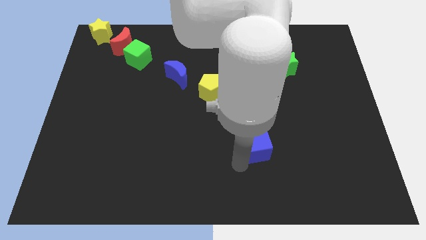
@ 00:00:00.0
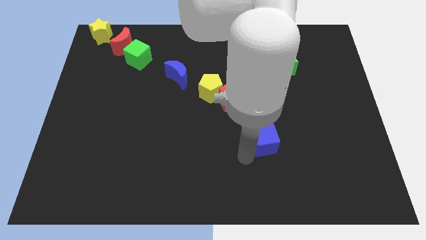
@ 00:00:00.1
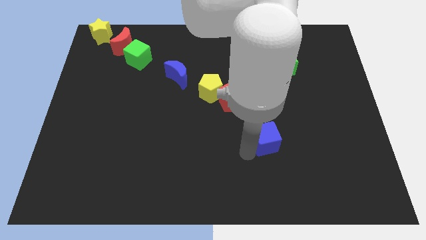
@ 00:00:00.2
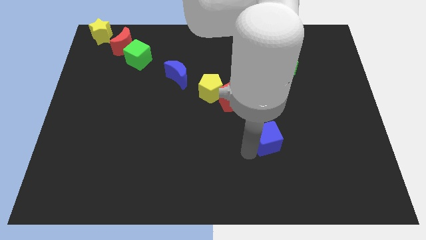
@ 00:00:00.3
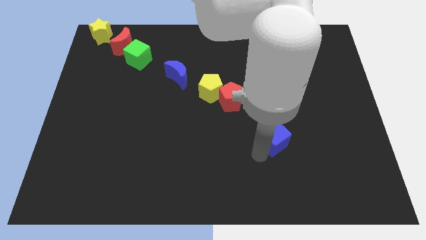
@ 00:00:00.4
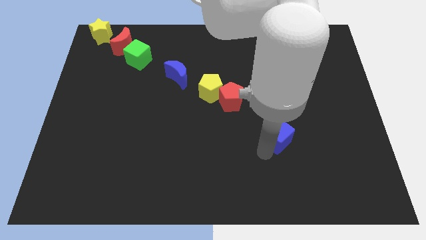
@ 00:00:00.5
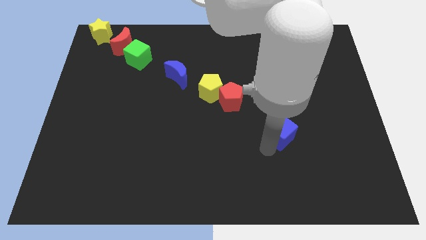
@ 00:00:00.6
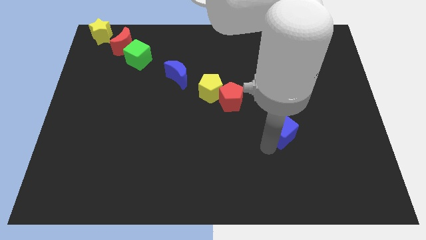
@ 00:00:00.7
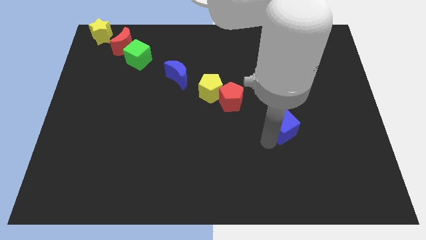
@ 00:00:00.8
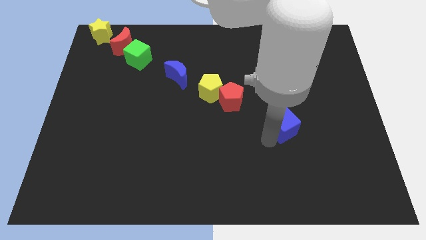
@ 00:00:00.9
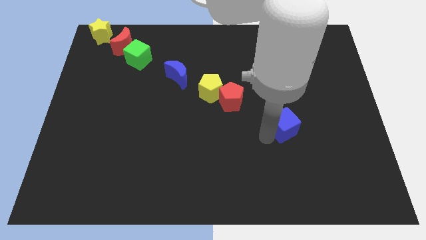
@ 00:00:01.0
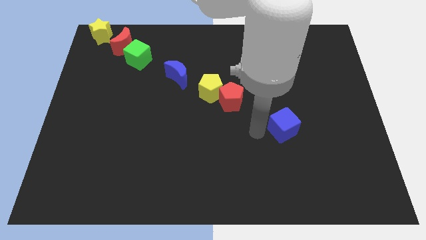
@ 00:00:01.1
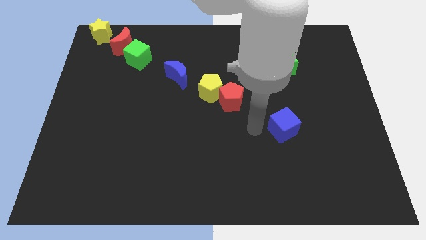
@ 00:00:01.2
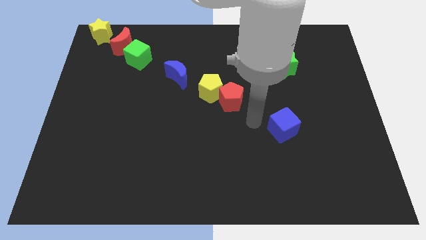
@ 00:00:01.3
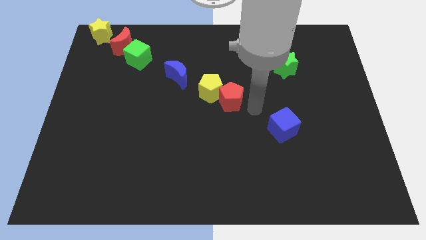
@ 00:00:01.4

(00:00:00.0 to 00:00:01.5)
slide the blue cube to the right side of the board

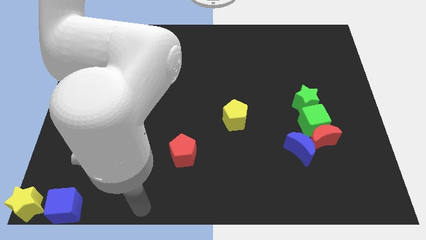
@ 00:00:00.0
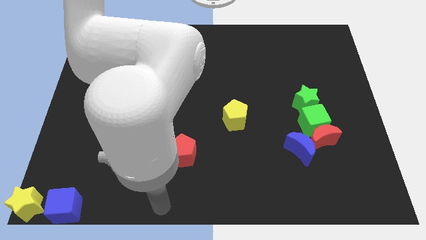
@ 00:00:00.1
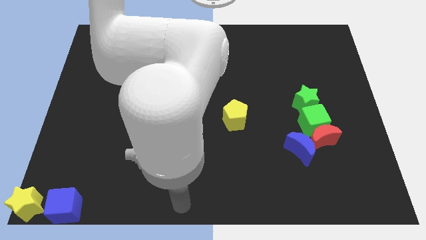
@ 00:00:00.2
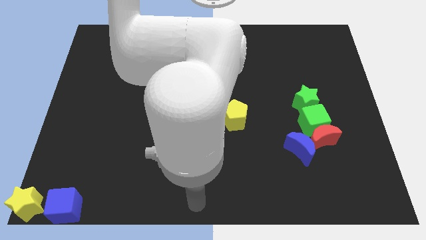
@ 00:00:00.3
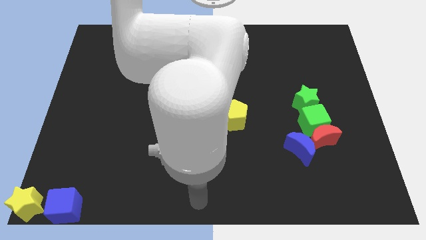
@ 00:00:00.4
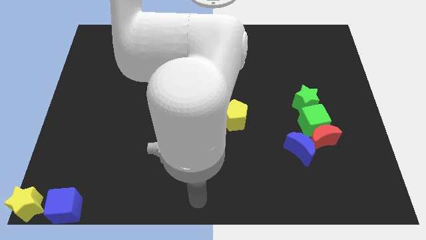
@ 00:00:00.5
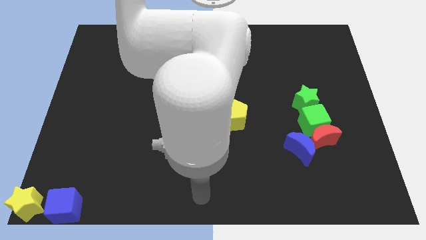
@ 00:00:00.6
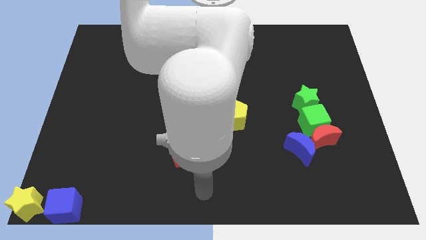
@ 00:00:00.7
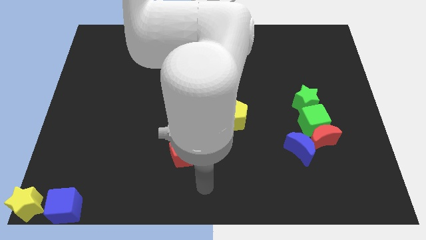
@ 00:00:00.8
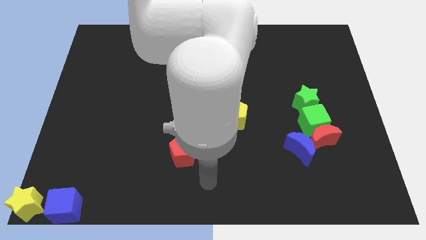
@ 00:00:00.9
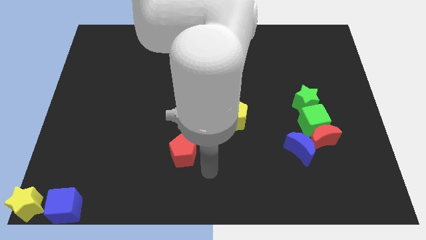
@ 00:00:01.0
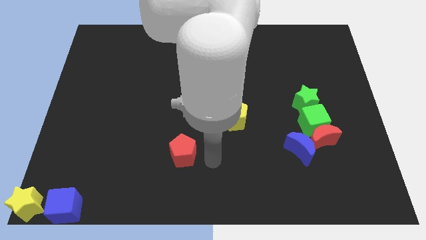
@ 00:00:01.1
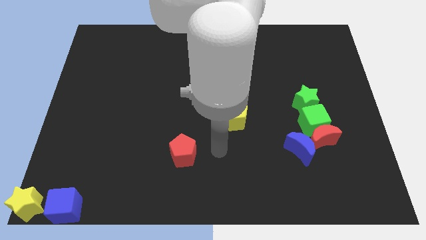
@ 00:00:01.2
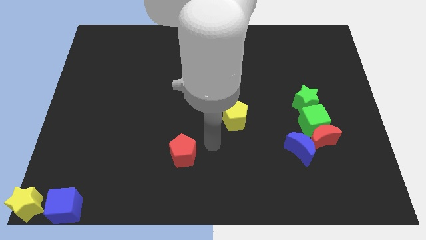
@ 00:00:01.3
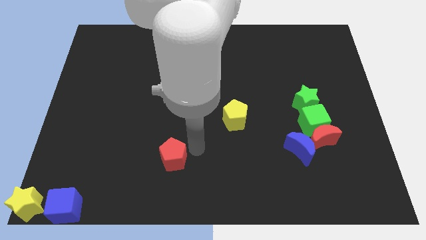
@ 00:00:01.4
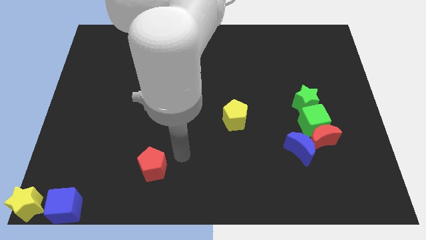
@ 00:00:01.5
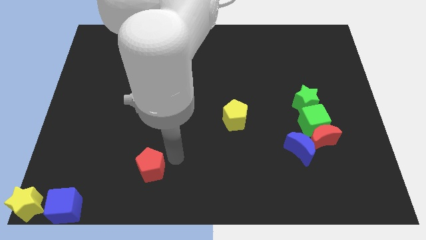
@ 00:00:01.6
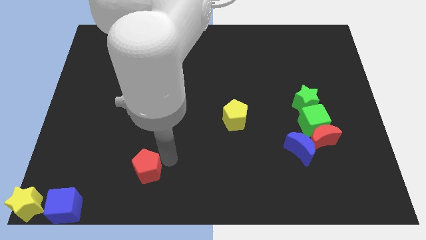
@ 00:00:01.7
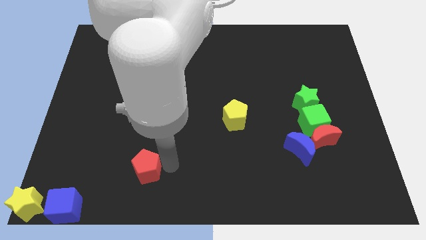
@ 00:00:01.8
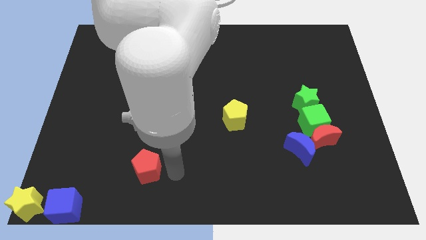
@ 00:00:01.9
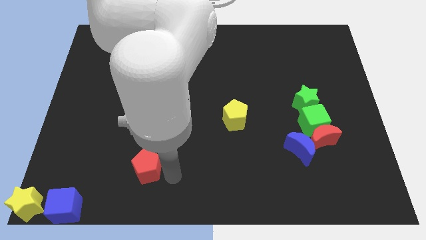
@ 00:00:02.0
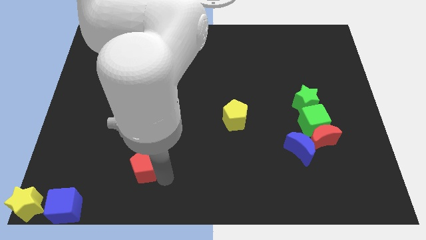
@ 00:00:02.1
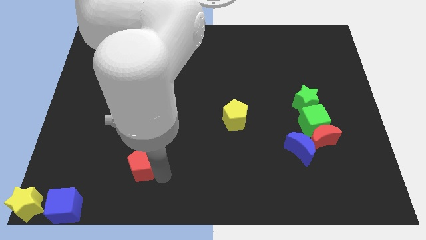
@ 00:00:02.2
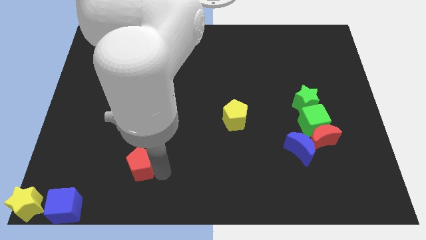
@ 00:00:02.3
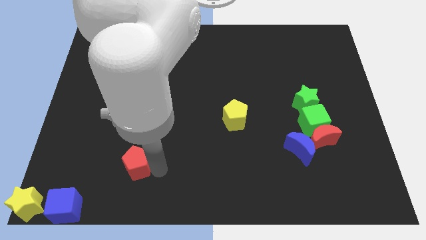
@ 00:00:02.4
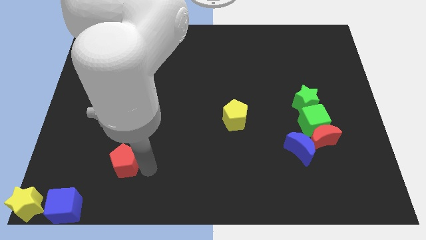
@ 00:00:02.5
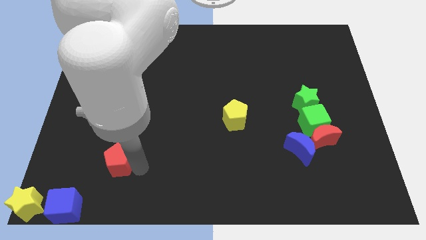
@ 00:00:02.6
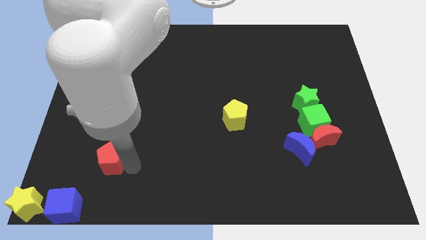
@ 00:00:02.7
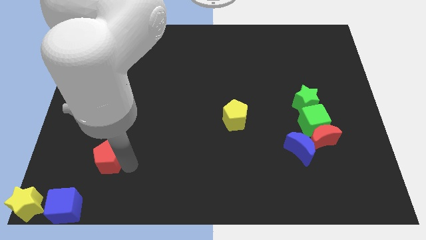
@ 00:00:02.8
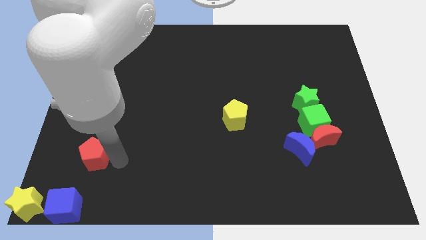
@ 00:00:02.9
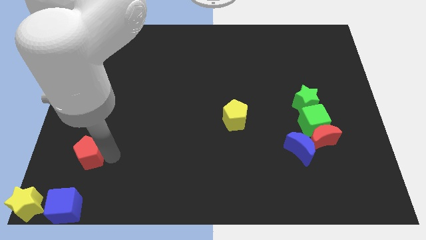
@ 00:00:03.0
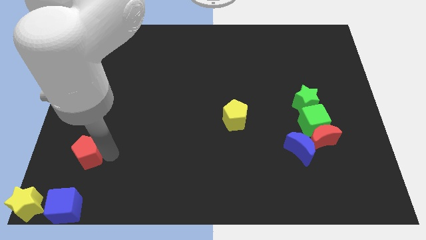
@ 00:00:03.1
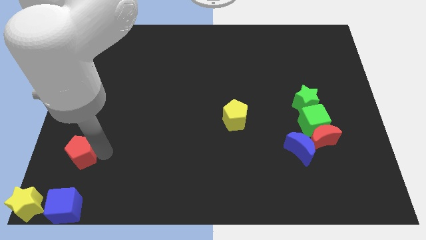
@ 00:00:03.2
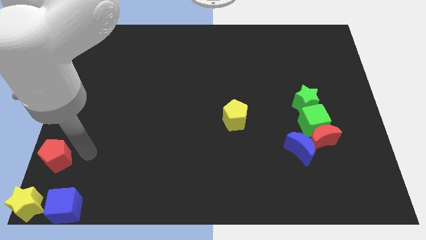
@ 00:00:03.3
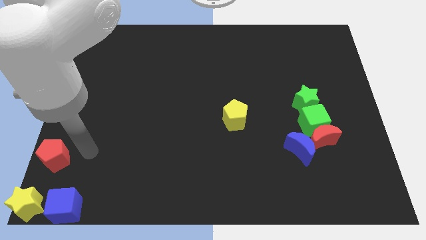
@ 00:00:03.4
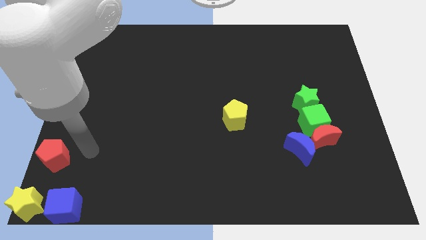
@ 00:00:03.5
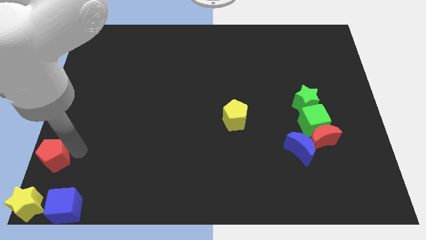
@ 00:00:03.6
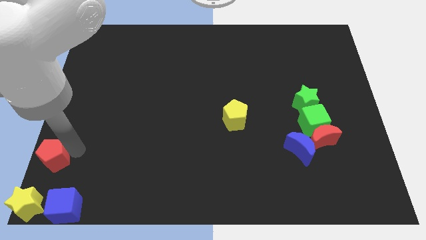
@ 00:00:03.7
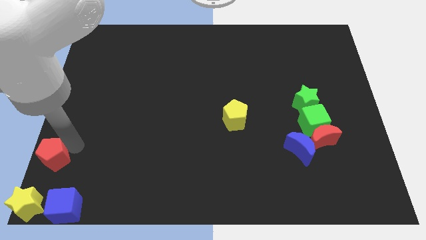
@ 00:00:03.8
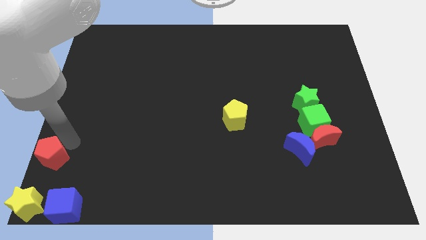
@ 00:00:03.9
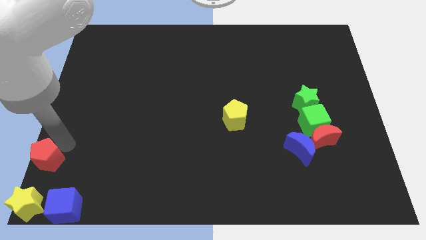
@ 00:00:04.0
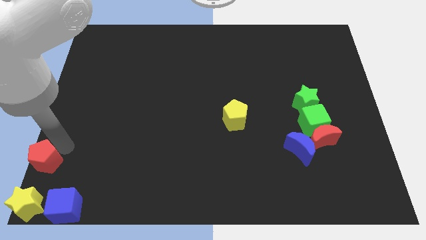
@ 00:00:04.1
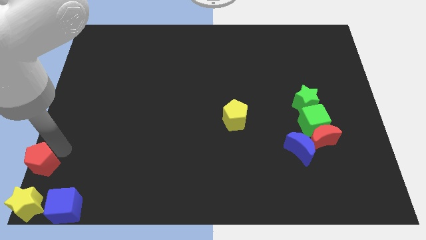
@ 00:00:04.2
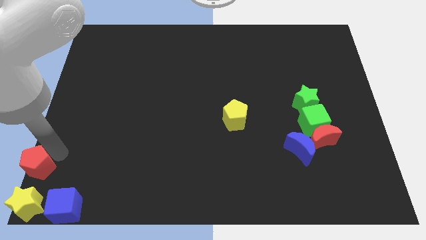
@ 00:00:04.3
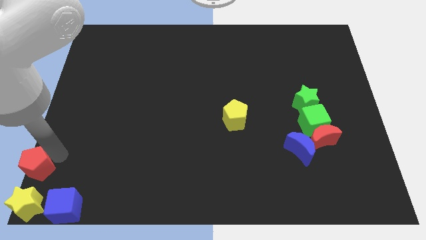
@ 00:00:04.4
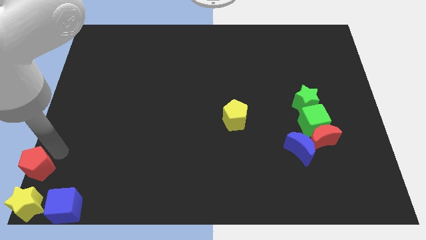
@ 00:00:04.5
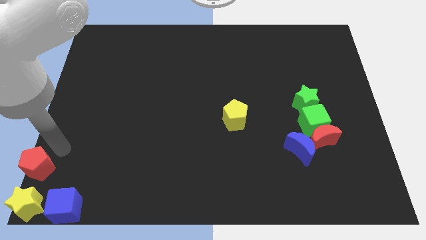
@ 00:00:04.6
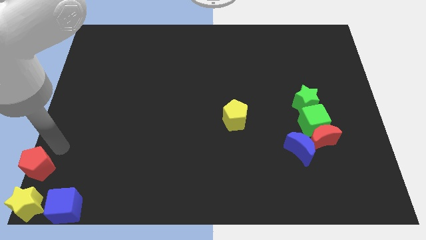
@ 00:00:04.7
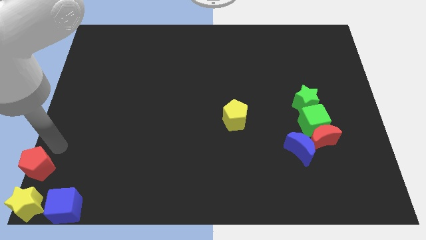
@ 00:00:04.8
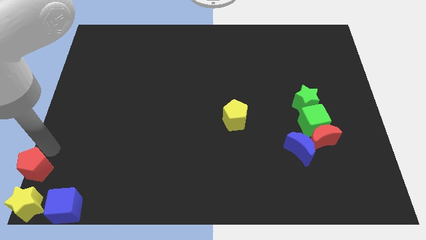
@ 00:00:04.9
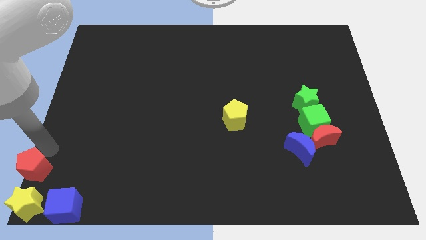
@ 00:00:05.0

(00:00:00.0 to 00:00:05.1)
place the red pentagon above the yellow star

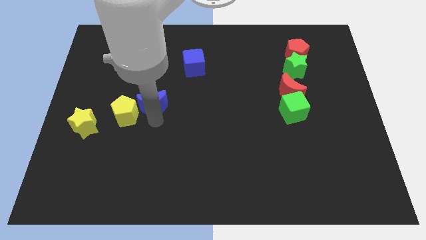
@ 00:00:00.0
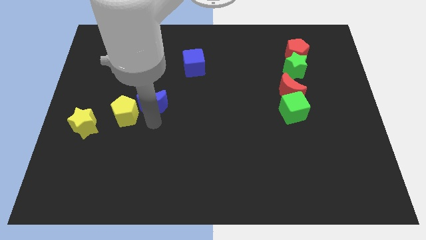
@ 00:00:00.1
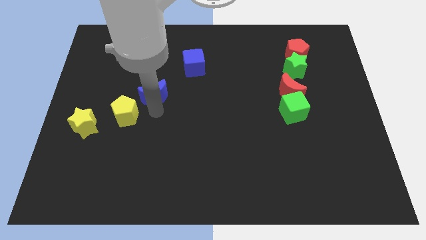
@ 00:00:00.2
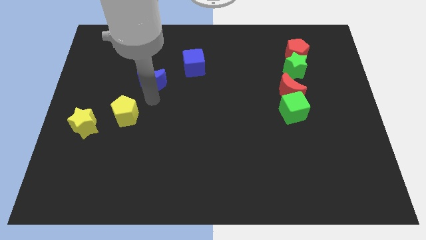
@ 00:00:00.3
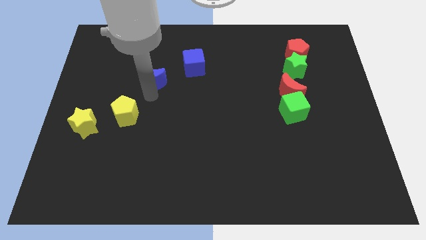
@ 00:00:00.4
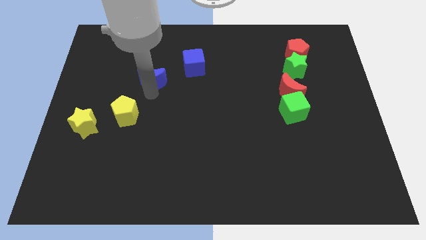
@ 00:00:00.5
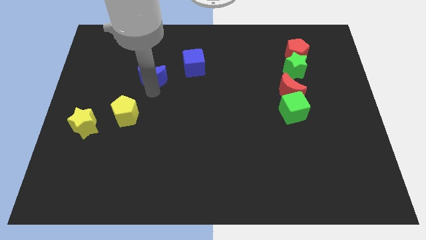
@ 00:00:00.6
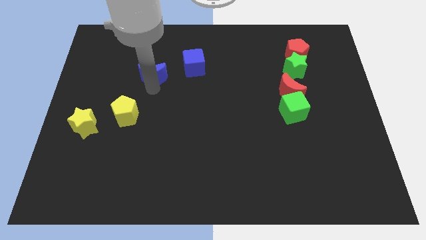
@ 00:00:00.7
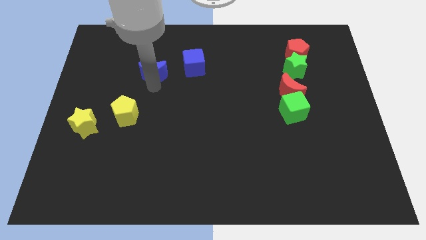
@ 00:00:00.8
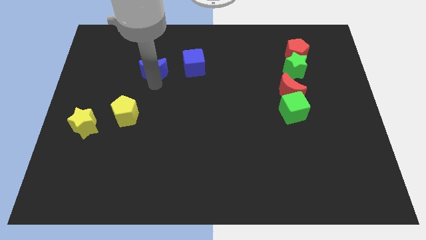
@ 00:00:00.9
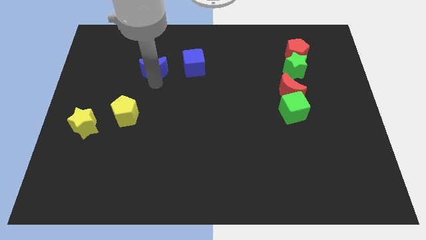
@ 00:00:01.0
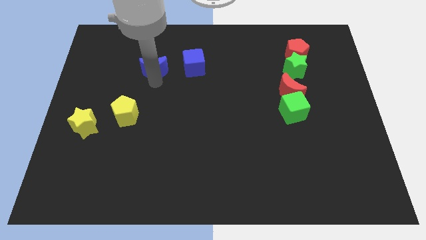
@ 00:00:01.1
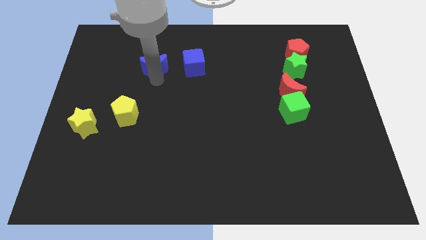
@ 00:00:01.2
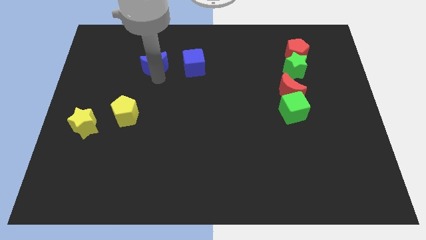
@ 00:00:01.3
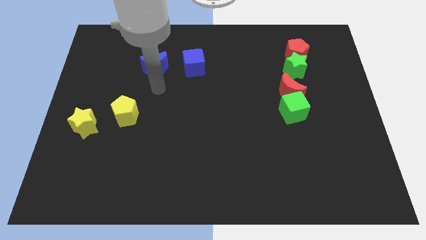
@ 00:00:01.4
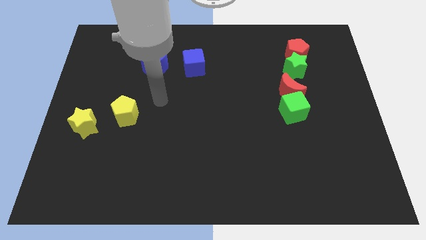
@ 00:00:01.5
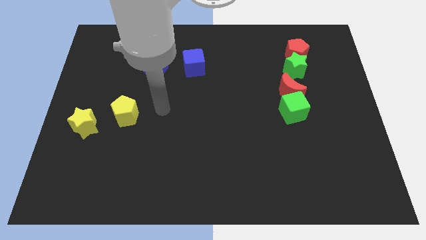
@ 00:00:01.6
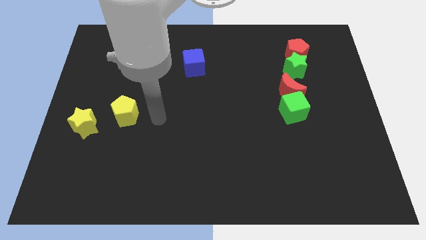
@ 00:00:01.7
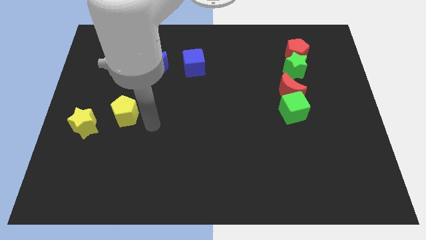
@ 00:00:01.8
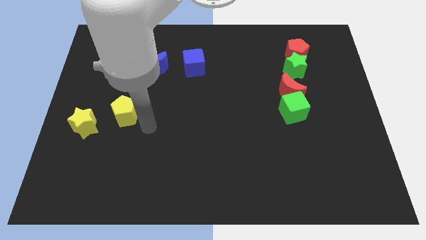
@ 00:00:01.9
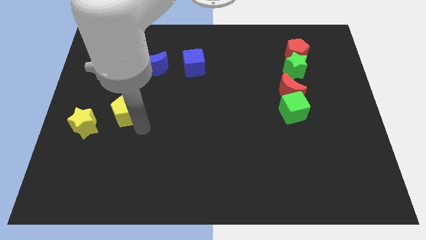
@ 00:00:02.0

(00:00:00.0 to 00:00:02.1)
push the blue moon to the left of the blue cube

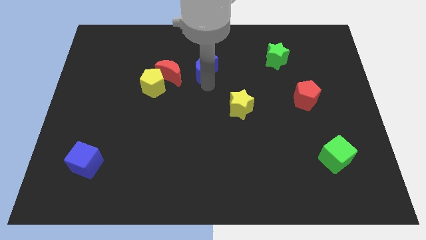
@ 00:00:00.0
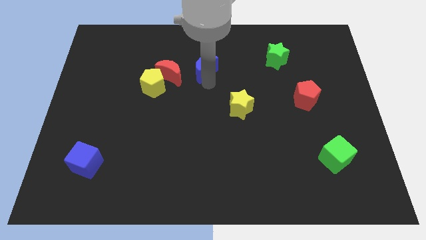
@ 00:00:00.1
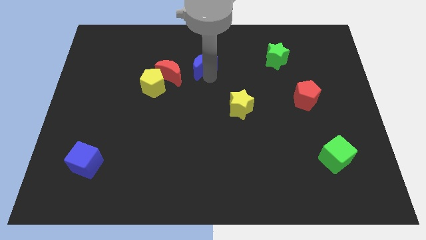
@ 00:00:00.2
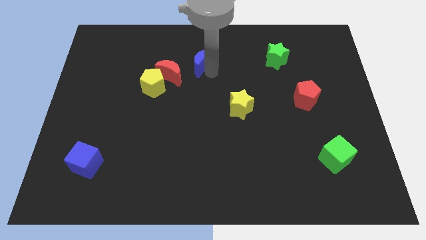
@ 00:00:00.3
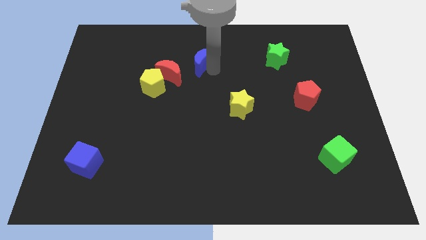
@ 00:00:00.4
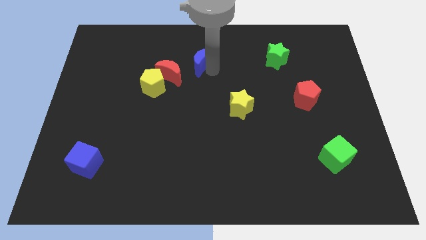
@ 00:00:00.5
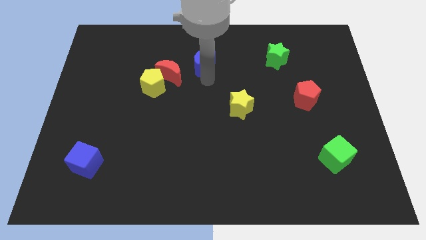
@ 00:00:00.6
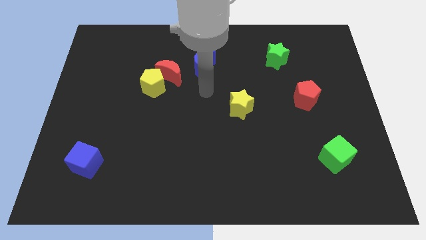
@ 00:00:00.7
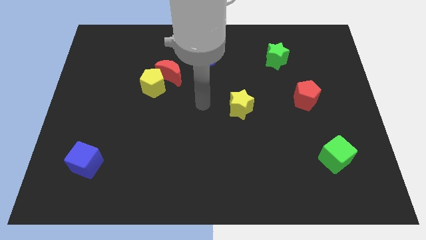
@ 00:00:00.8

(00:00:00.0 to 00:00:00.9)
push the blue crescent to the top of the board
